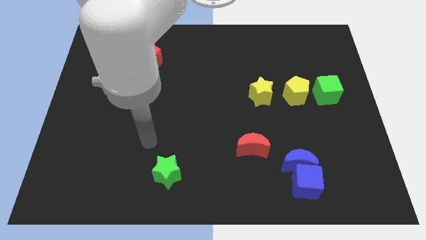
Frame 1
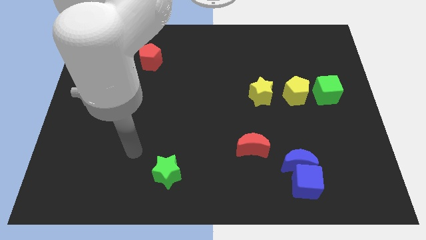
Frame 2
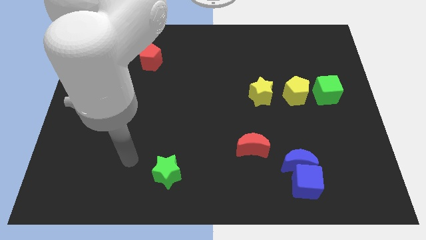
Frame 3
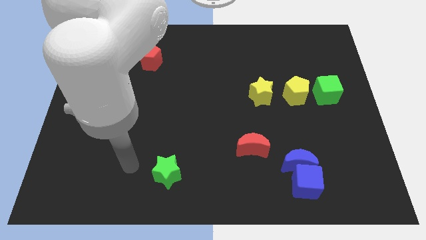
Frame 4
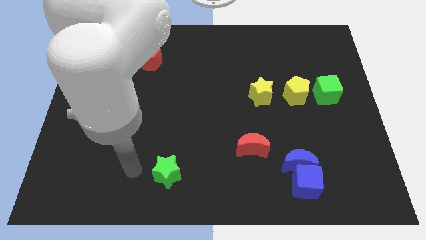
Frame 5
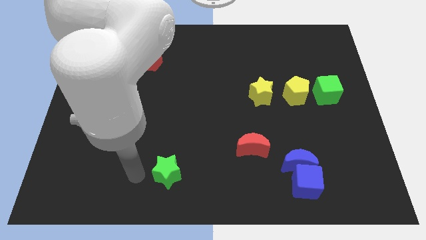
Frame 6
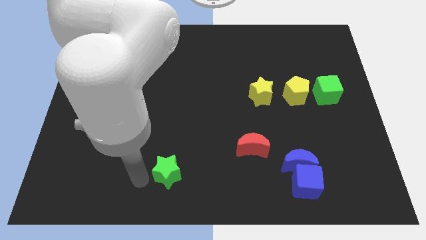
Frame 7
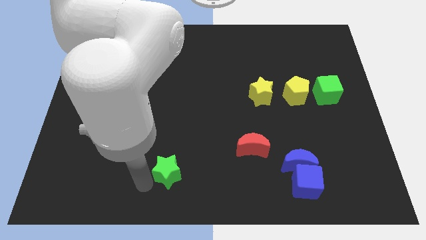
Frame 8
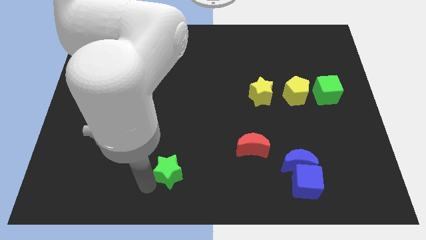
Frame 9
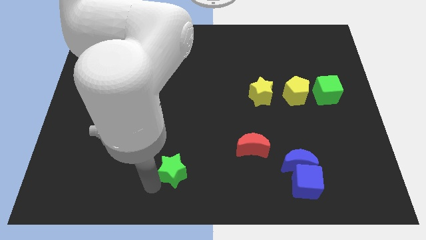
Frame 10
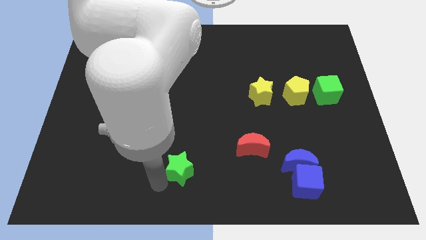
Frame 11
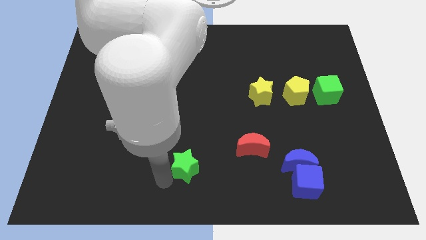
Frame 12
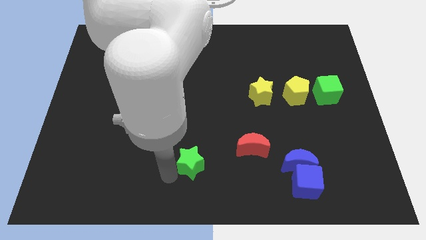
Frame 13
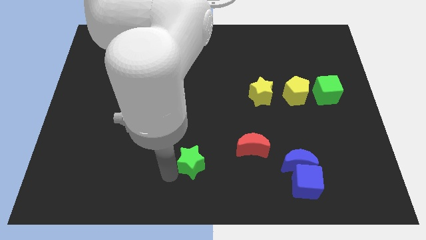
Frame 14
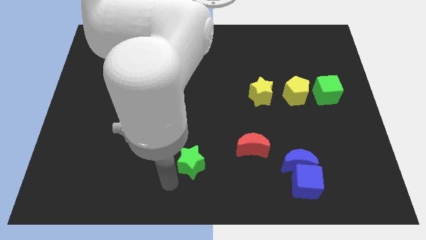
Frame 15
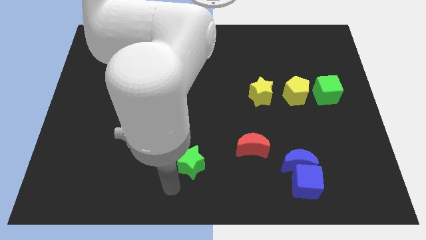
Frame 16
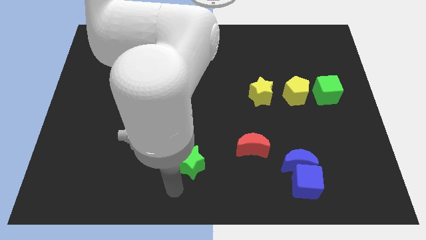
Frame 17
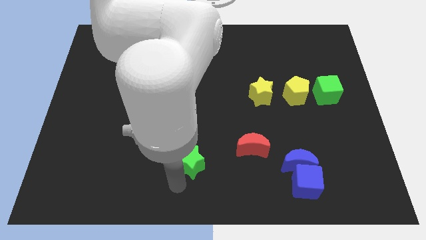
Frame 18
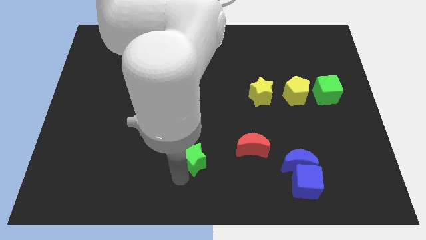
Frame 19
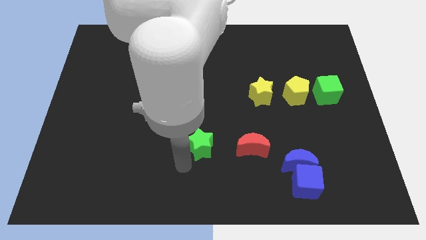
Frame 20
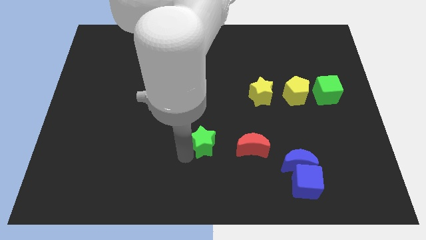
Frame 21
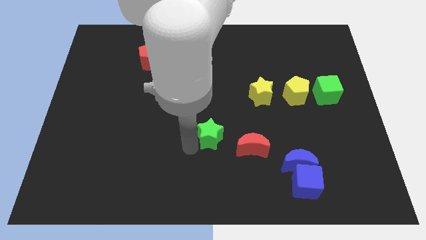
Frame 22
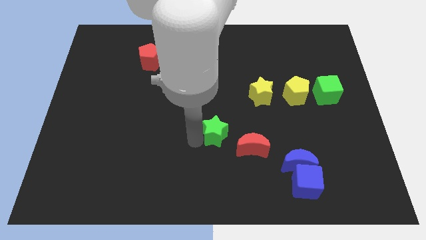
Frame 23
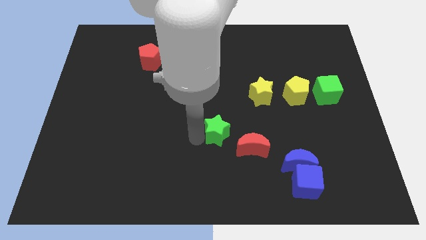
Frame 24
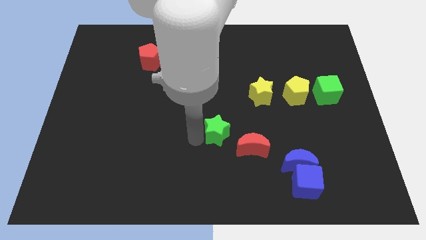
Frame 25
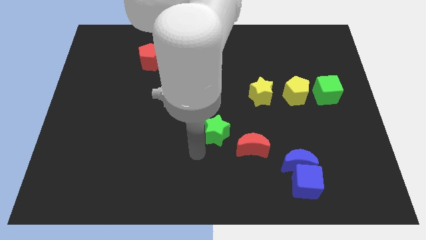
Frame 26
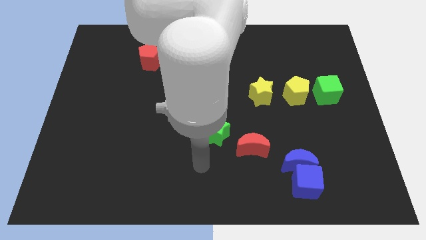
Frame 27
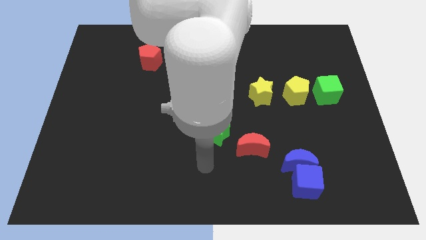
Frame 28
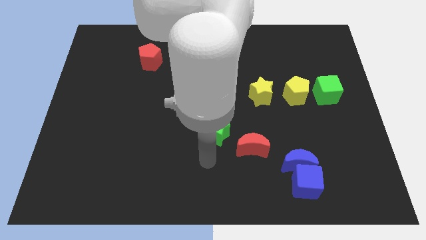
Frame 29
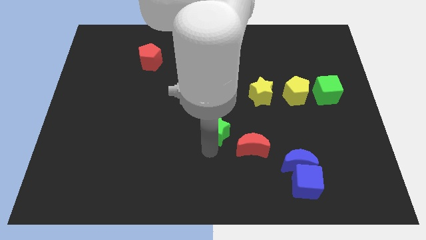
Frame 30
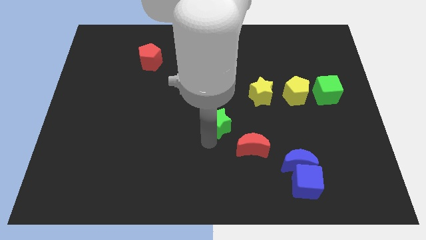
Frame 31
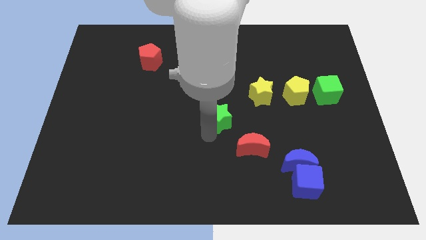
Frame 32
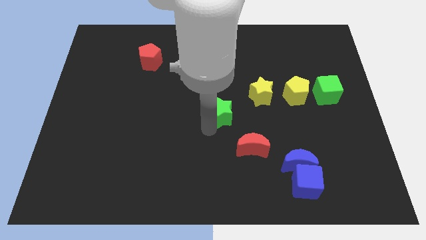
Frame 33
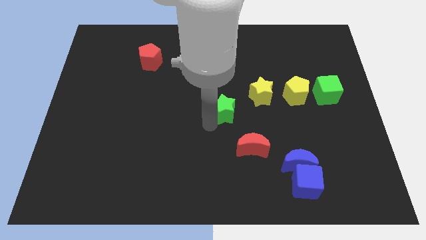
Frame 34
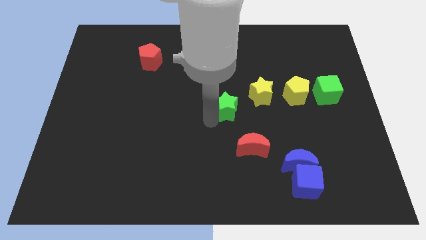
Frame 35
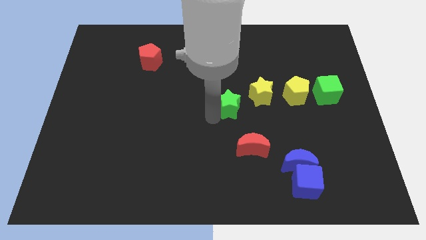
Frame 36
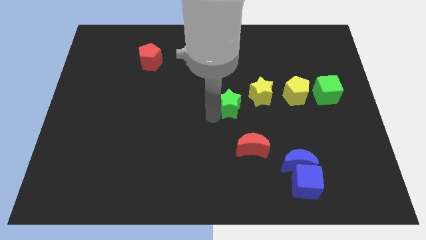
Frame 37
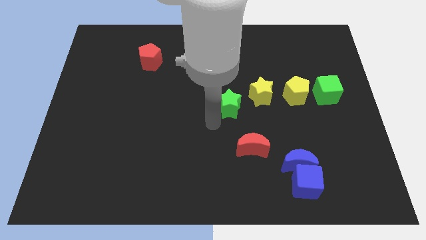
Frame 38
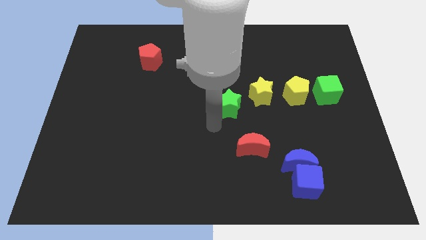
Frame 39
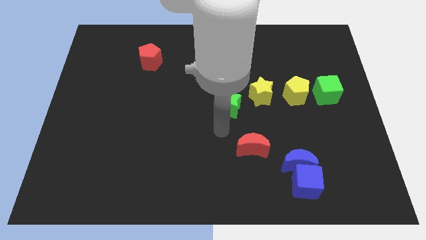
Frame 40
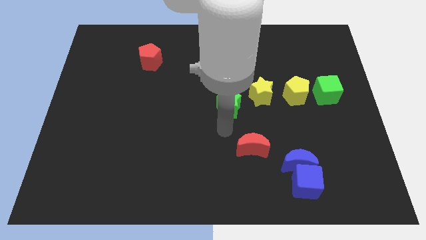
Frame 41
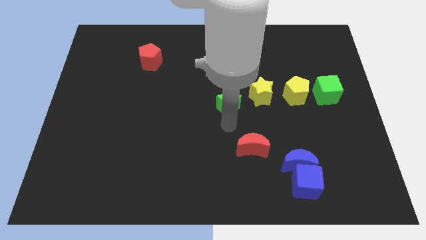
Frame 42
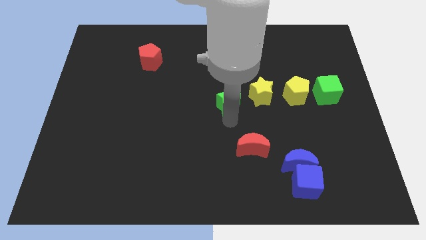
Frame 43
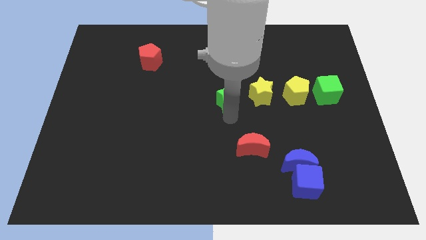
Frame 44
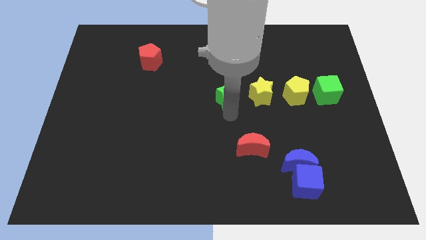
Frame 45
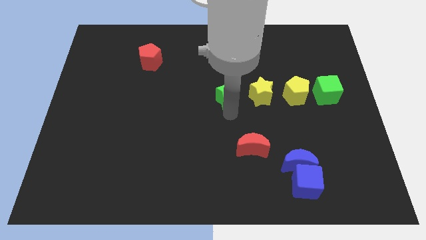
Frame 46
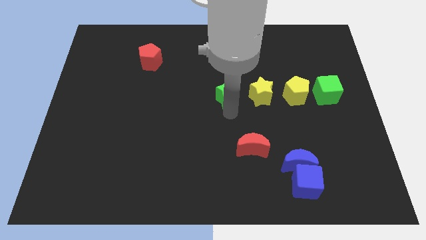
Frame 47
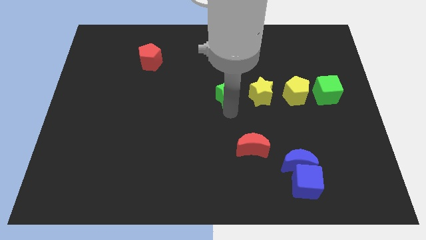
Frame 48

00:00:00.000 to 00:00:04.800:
place green star to the left side of yellow star

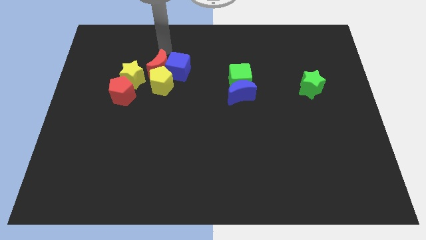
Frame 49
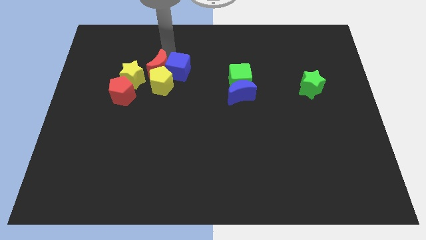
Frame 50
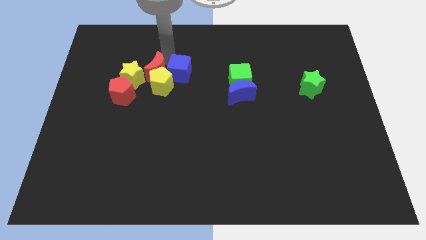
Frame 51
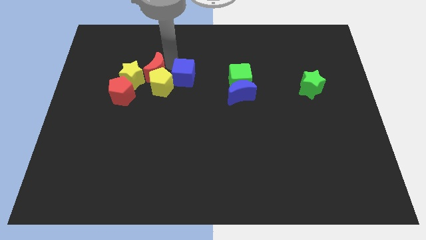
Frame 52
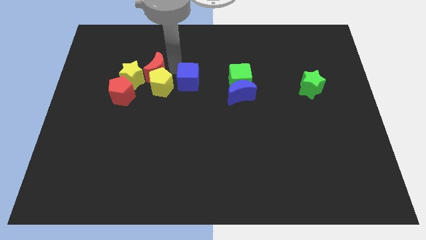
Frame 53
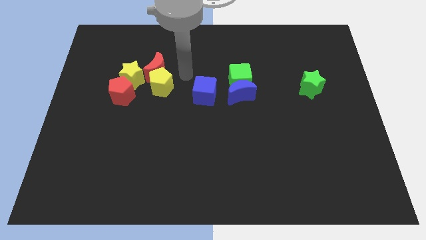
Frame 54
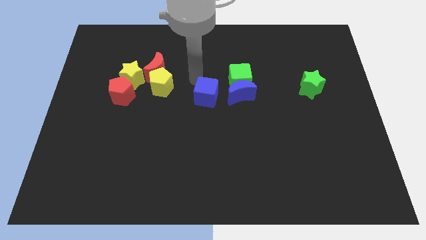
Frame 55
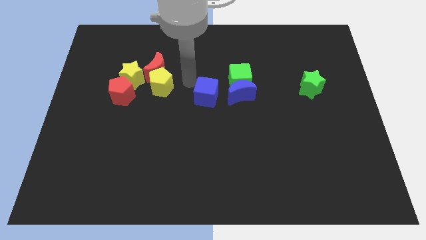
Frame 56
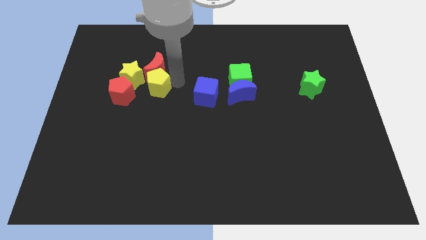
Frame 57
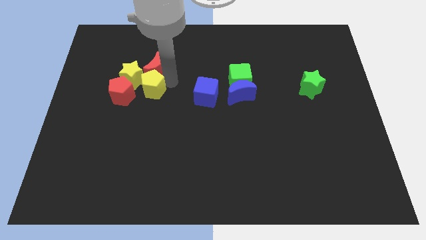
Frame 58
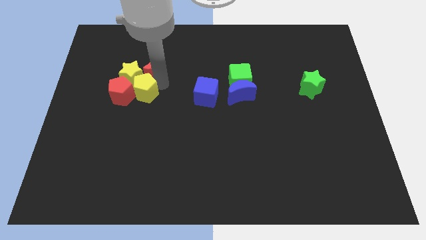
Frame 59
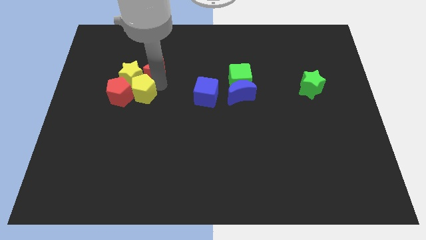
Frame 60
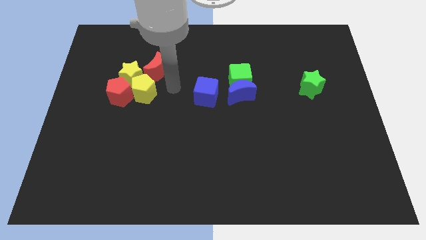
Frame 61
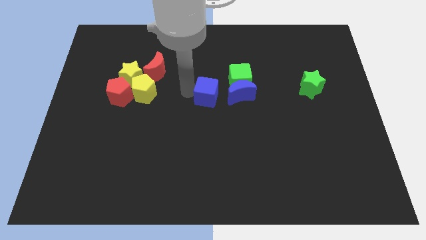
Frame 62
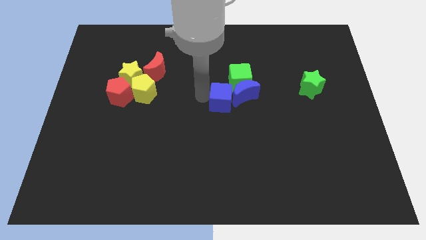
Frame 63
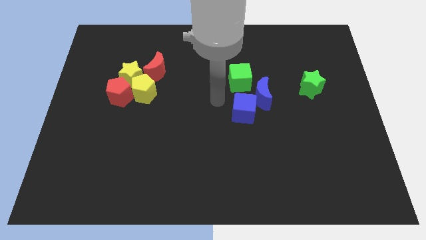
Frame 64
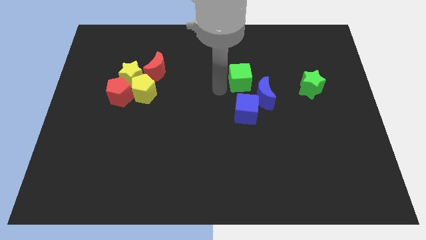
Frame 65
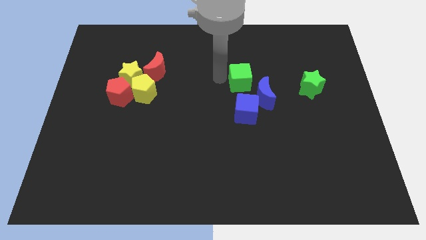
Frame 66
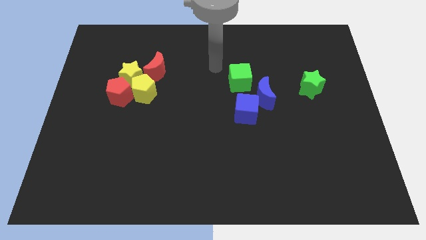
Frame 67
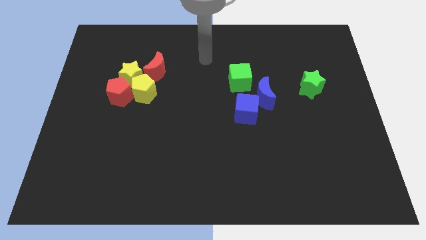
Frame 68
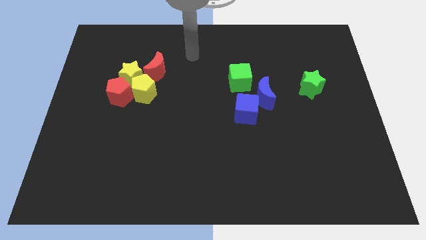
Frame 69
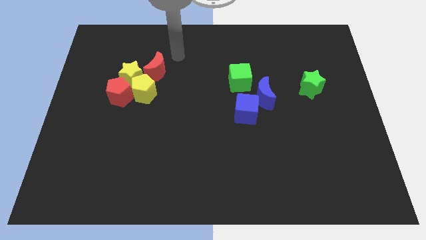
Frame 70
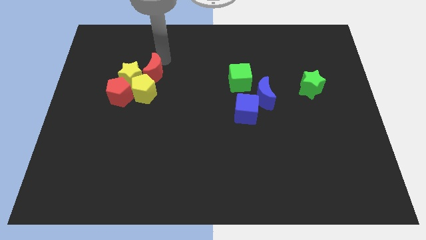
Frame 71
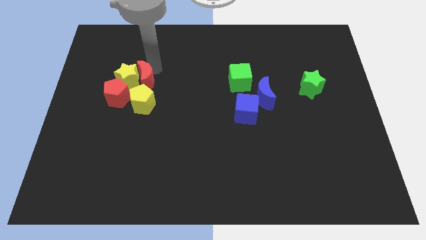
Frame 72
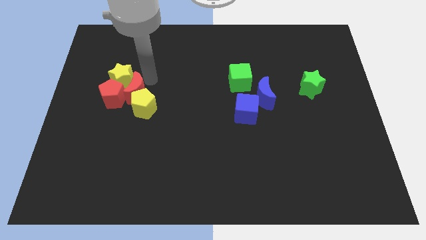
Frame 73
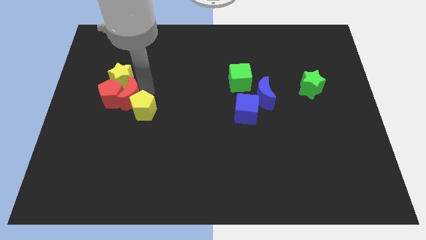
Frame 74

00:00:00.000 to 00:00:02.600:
move the blue cube into the blue crescent

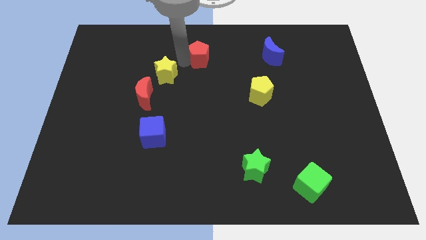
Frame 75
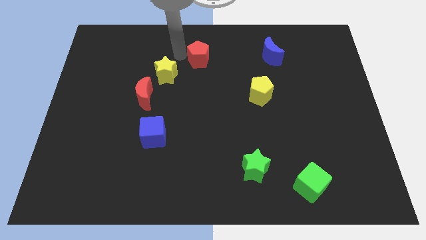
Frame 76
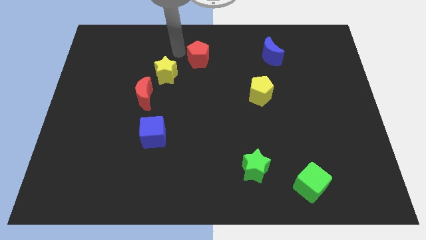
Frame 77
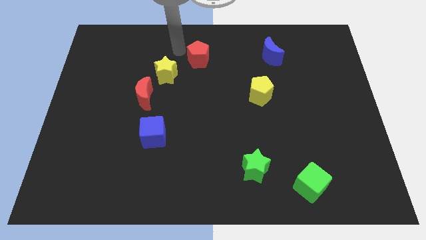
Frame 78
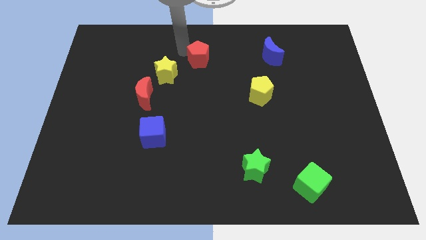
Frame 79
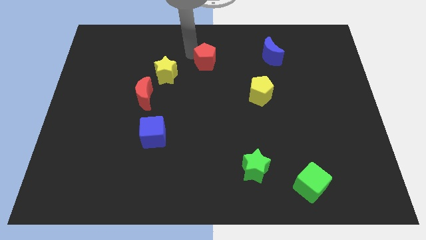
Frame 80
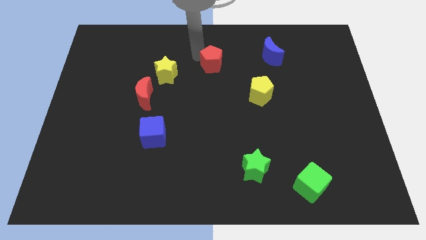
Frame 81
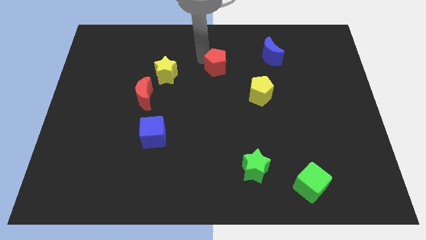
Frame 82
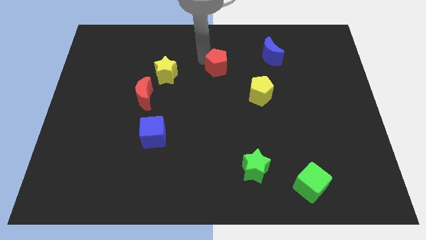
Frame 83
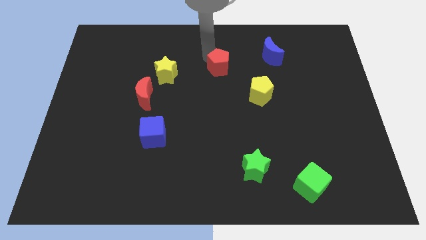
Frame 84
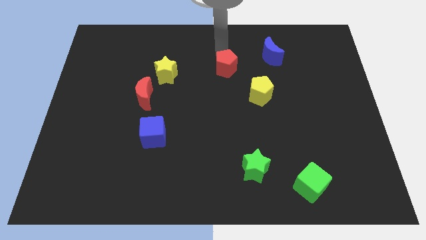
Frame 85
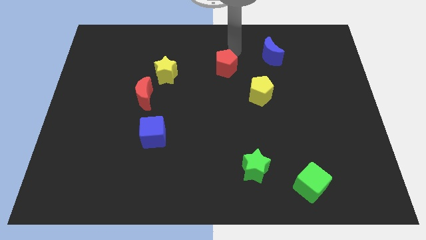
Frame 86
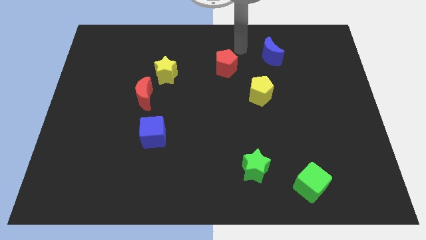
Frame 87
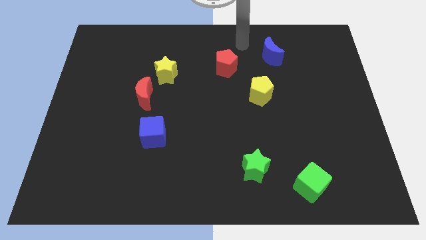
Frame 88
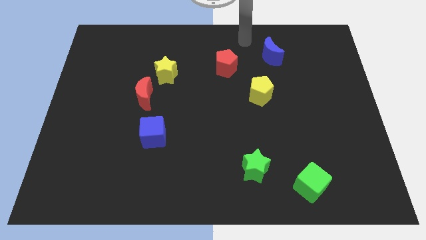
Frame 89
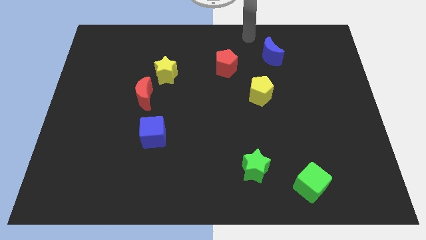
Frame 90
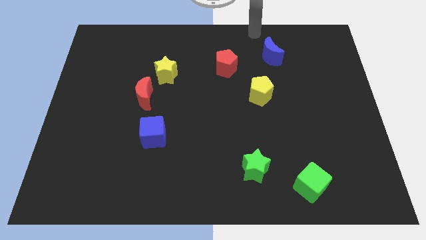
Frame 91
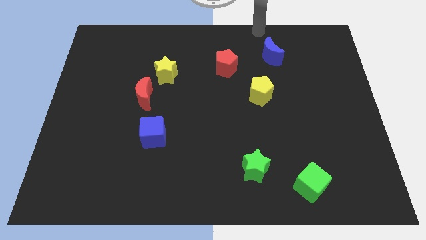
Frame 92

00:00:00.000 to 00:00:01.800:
move the red pentagon towards the yellow pentagon
